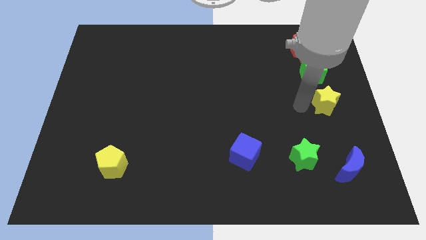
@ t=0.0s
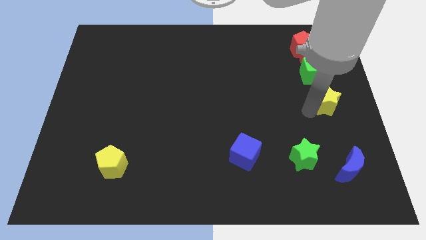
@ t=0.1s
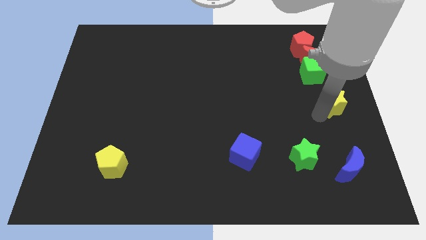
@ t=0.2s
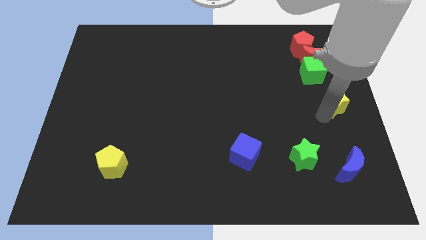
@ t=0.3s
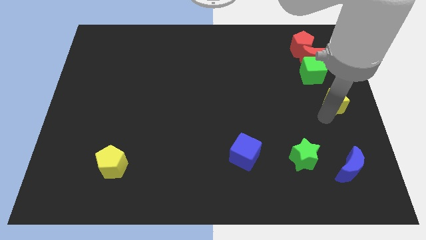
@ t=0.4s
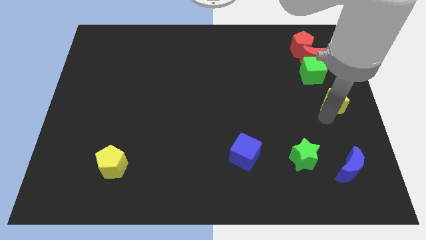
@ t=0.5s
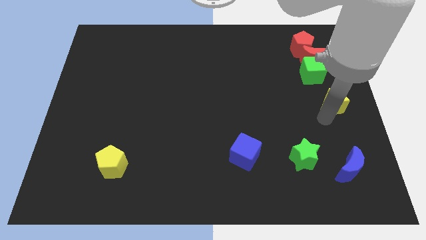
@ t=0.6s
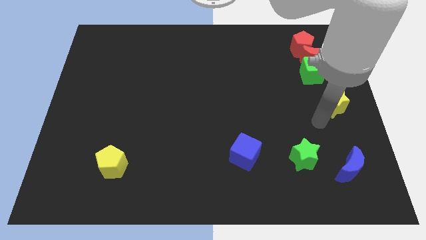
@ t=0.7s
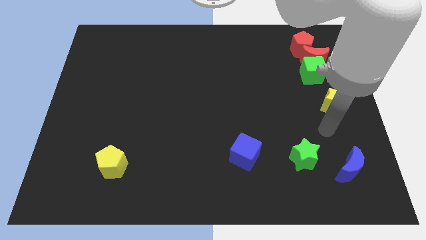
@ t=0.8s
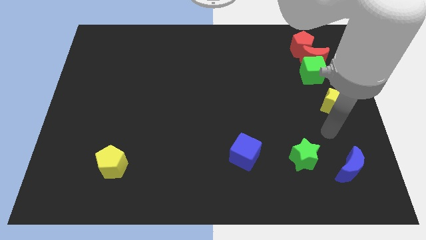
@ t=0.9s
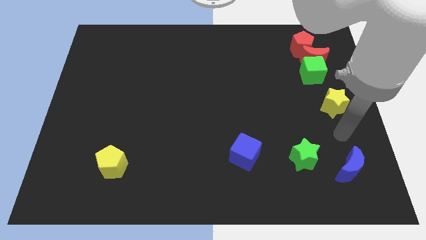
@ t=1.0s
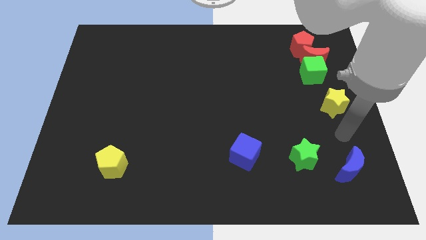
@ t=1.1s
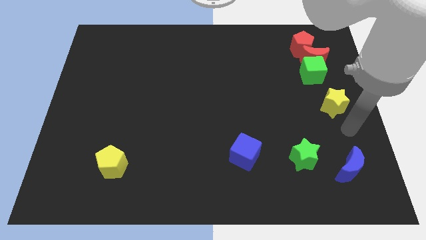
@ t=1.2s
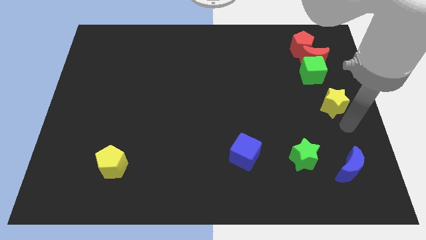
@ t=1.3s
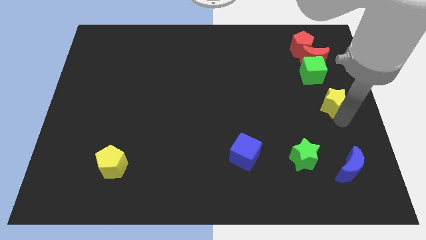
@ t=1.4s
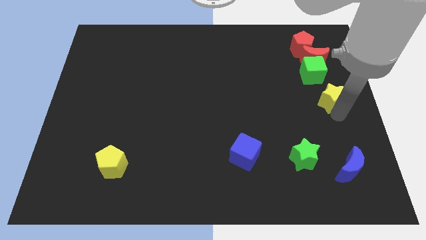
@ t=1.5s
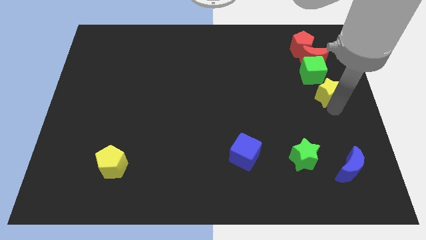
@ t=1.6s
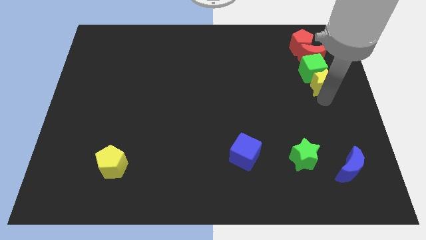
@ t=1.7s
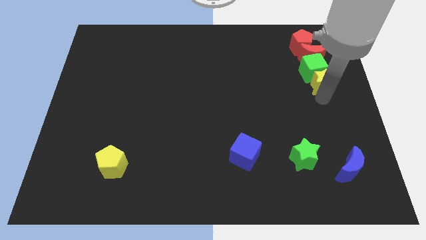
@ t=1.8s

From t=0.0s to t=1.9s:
move the yellow star into the green cube

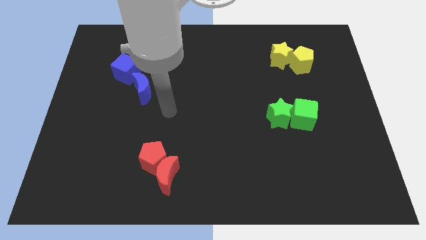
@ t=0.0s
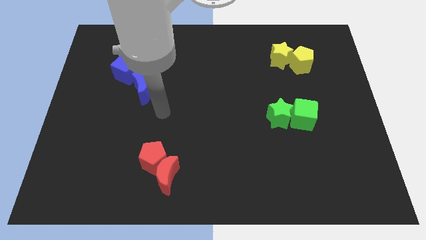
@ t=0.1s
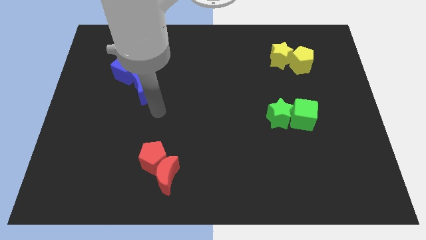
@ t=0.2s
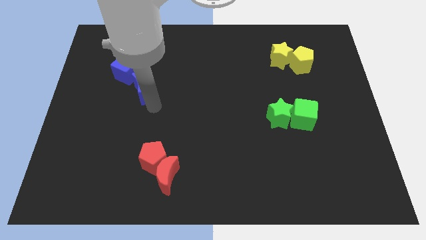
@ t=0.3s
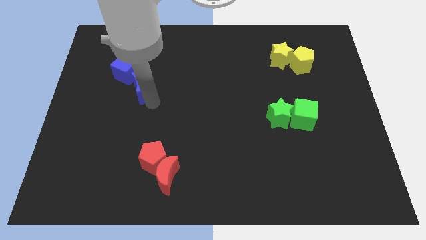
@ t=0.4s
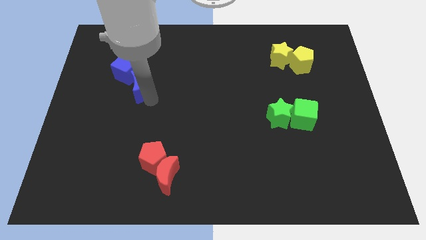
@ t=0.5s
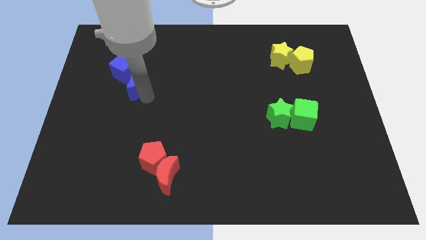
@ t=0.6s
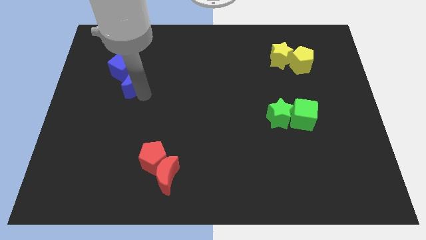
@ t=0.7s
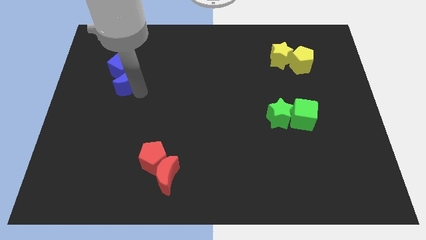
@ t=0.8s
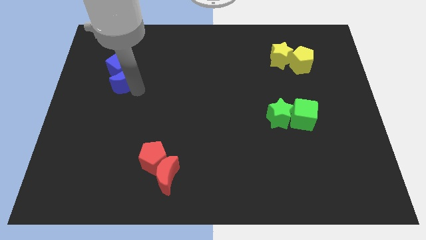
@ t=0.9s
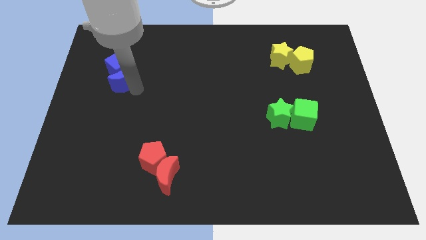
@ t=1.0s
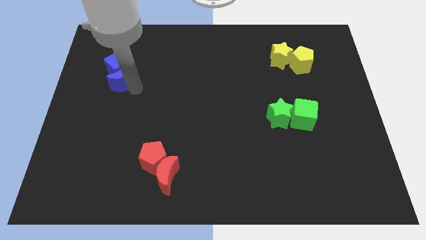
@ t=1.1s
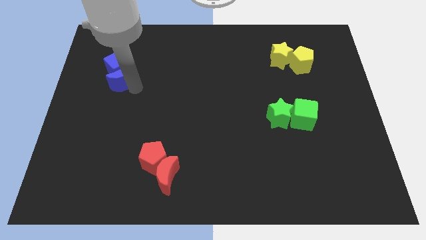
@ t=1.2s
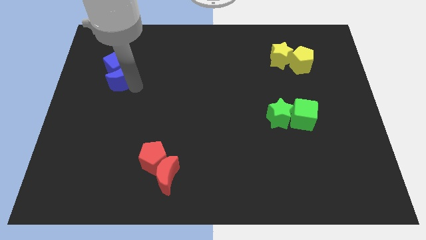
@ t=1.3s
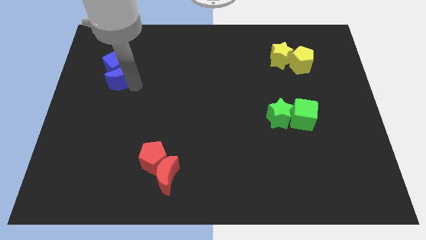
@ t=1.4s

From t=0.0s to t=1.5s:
push blue crescent into blue cube

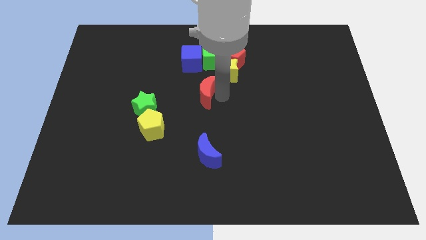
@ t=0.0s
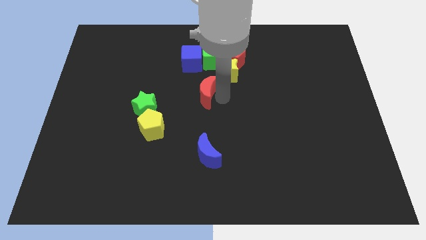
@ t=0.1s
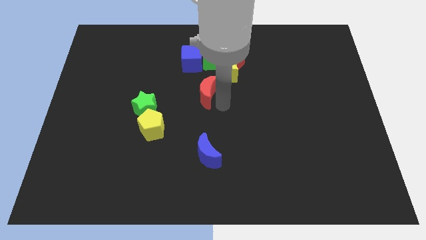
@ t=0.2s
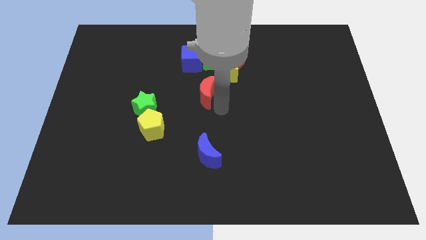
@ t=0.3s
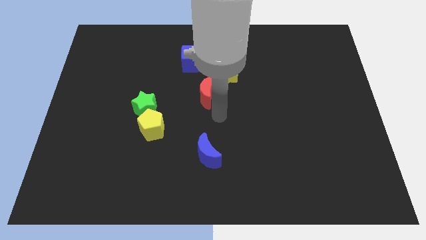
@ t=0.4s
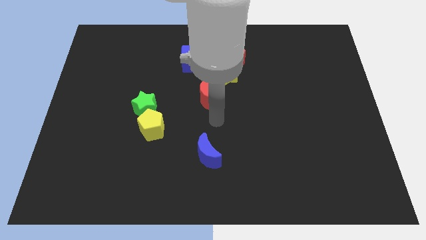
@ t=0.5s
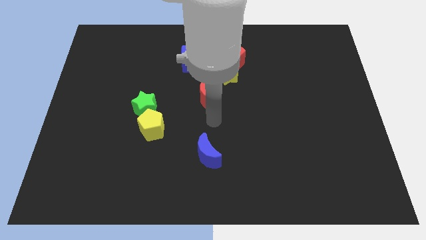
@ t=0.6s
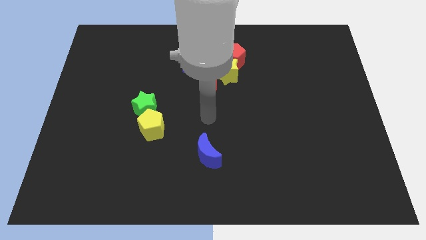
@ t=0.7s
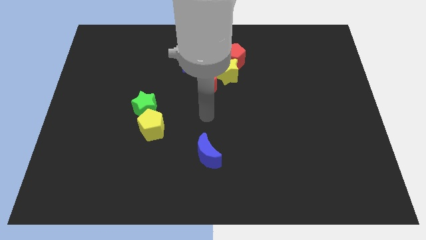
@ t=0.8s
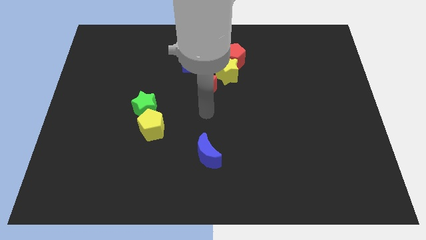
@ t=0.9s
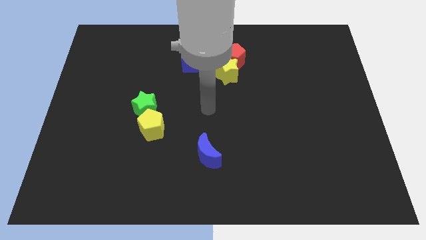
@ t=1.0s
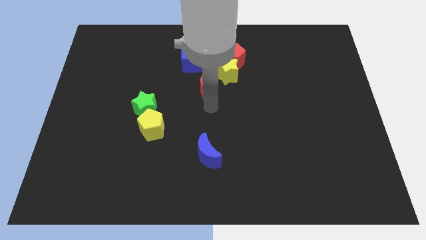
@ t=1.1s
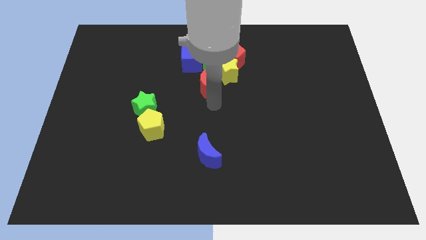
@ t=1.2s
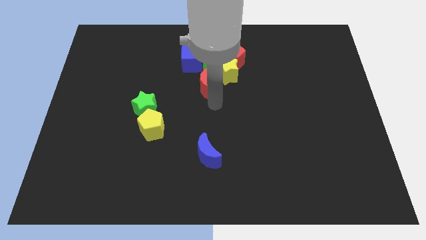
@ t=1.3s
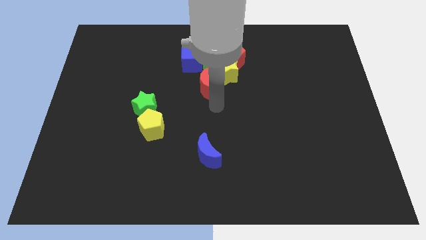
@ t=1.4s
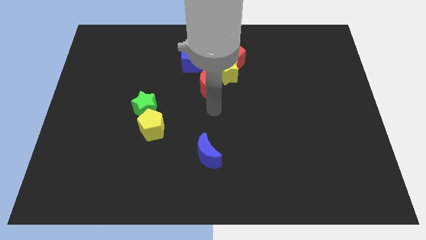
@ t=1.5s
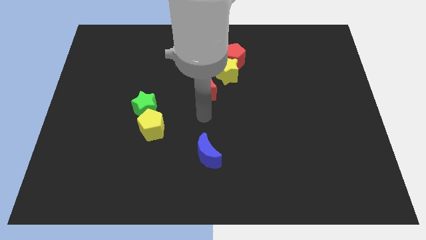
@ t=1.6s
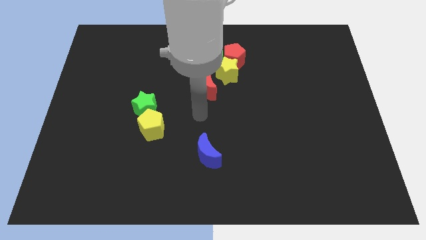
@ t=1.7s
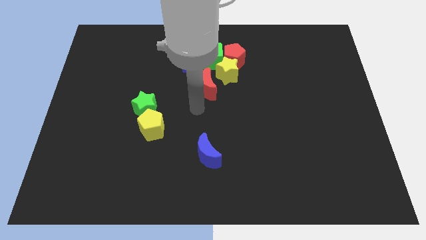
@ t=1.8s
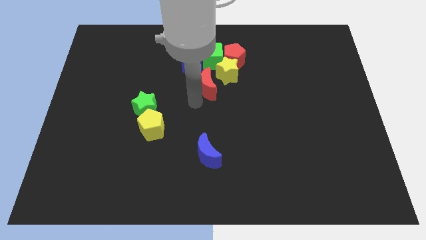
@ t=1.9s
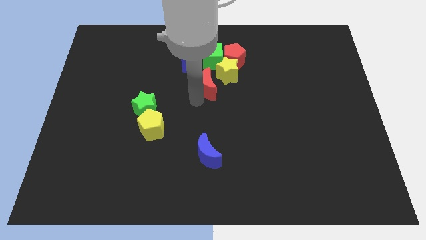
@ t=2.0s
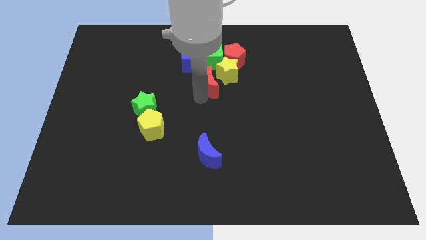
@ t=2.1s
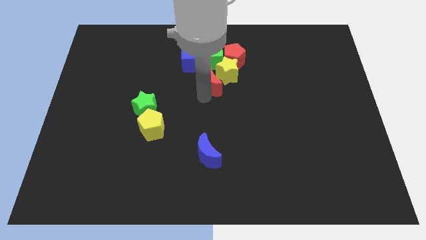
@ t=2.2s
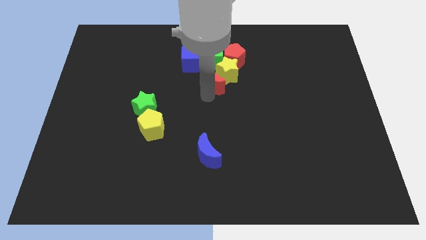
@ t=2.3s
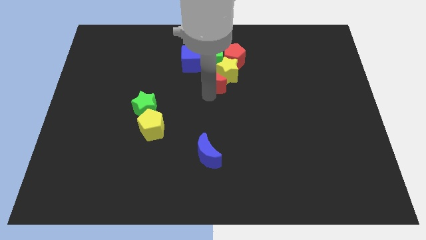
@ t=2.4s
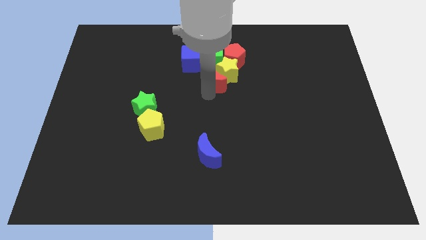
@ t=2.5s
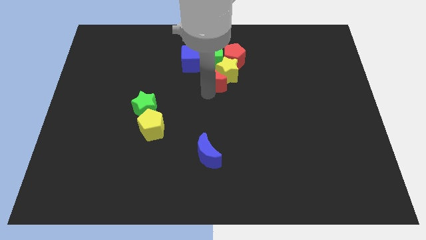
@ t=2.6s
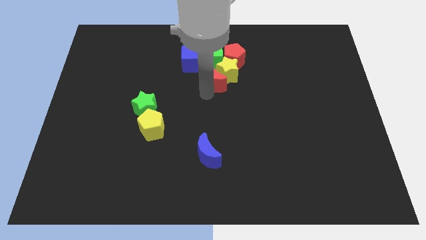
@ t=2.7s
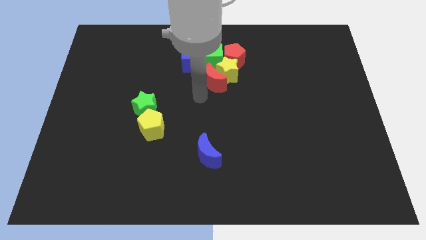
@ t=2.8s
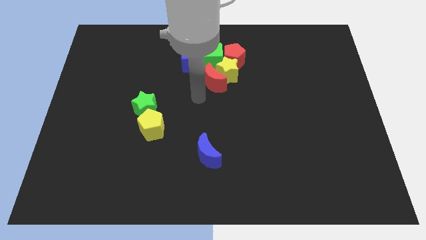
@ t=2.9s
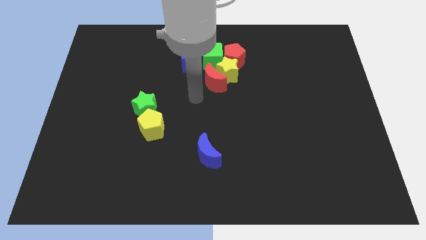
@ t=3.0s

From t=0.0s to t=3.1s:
push red moon in to yellow star

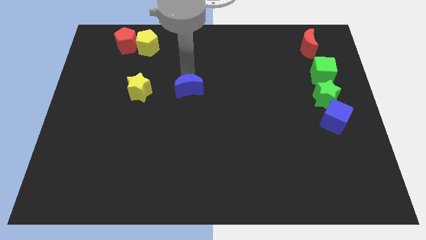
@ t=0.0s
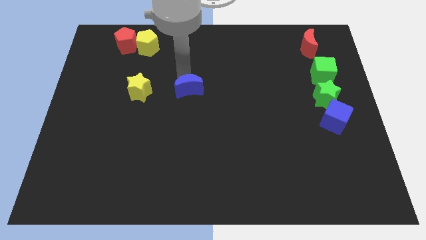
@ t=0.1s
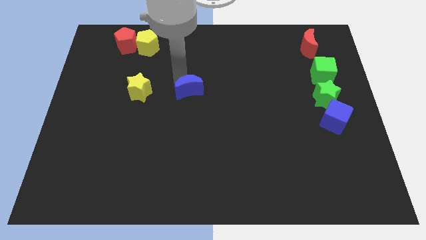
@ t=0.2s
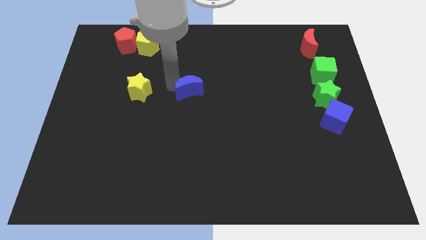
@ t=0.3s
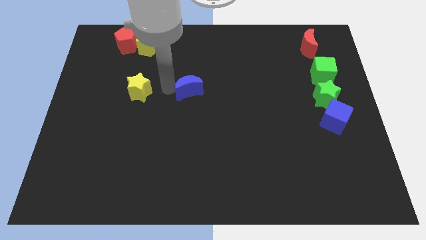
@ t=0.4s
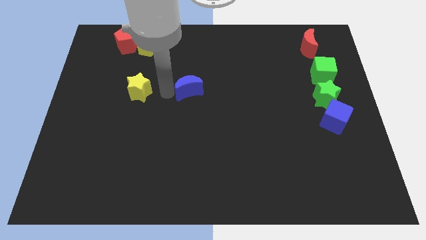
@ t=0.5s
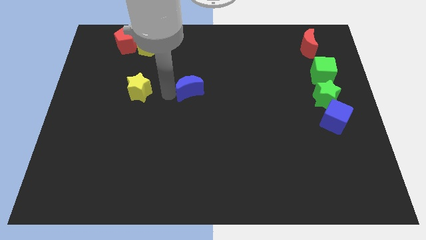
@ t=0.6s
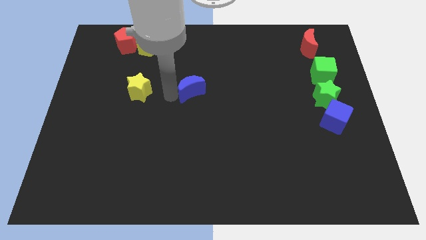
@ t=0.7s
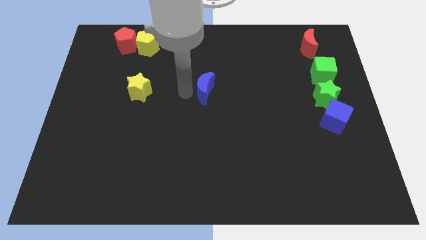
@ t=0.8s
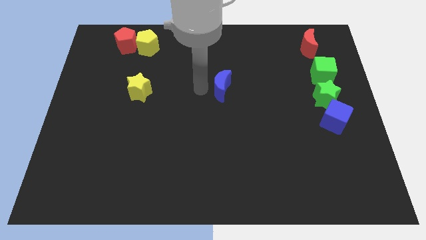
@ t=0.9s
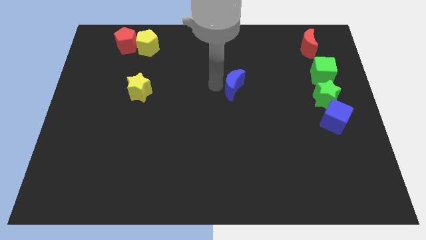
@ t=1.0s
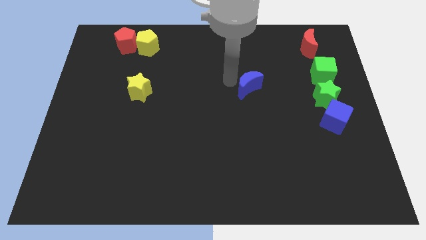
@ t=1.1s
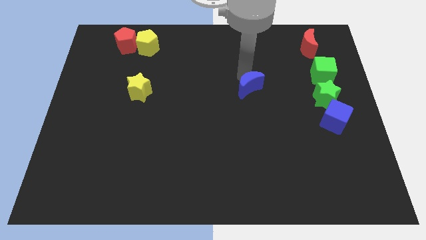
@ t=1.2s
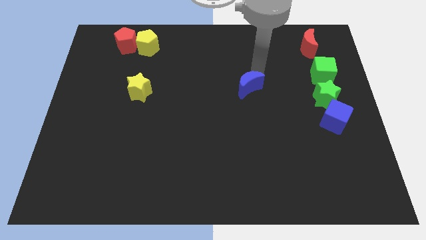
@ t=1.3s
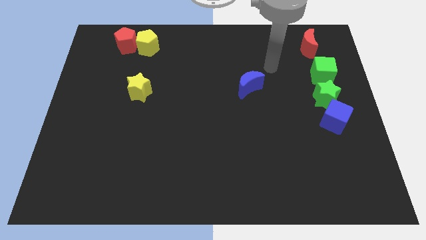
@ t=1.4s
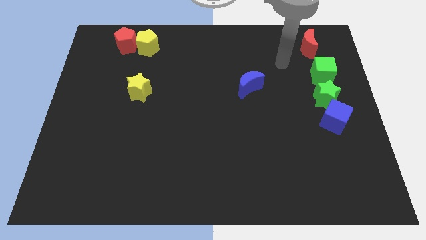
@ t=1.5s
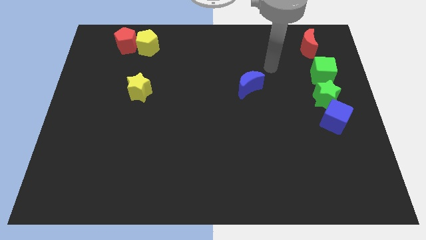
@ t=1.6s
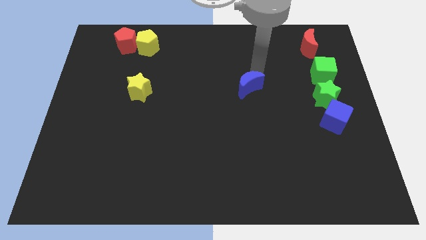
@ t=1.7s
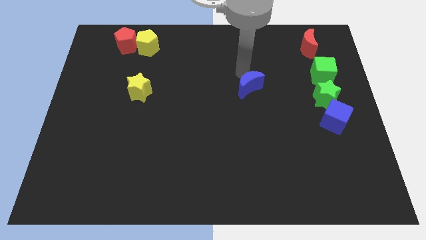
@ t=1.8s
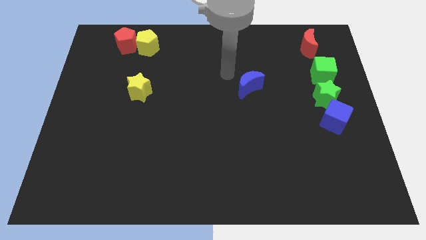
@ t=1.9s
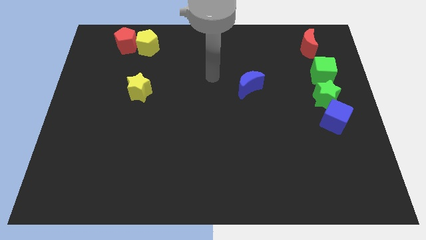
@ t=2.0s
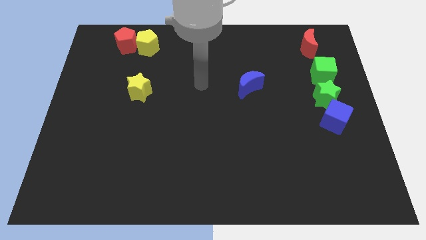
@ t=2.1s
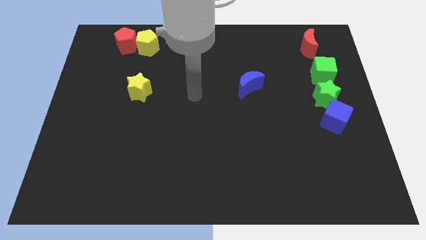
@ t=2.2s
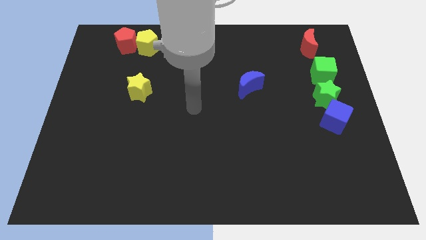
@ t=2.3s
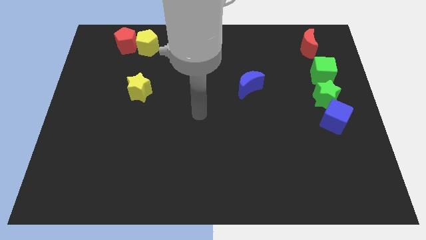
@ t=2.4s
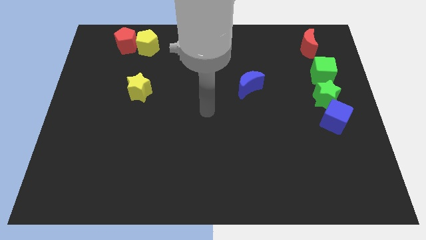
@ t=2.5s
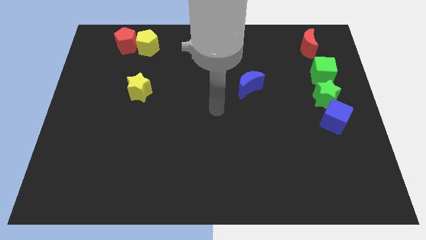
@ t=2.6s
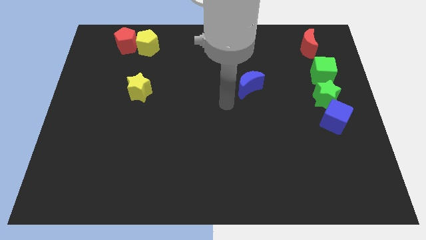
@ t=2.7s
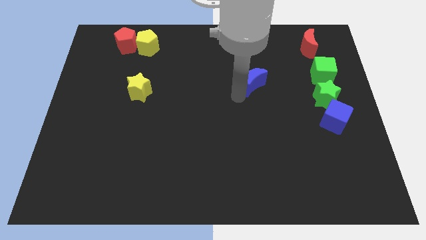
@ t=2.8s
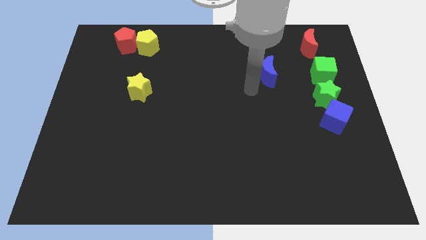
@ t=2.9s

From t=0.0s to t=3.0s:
push blue crescent diagonal to the left of the green cube
